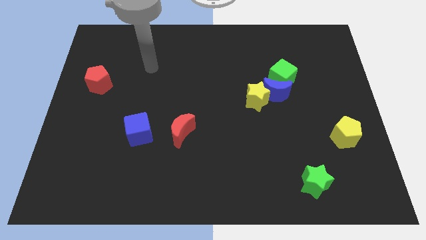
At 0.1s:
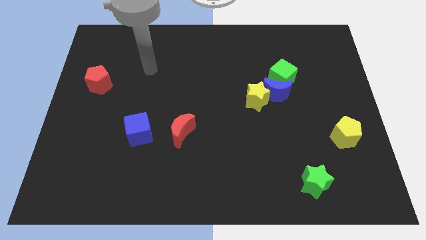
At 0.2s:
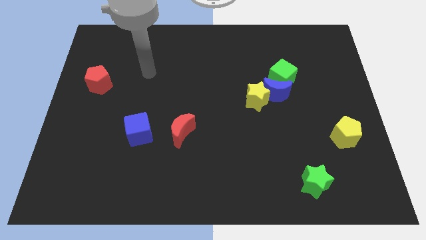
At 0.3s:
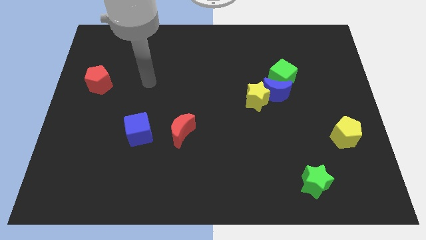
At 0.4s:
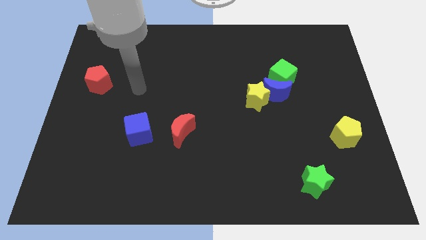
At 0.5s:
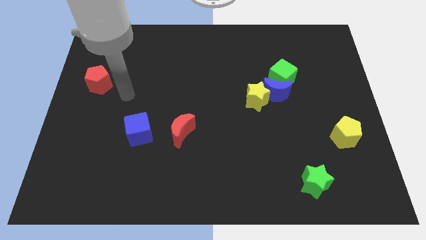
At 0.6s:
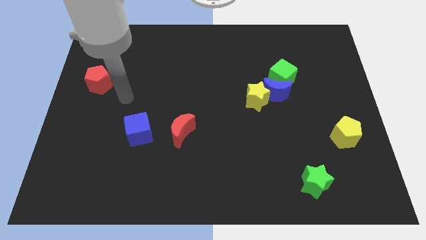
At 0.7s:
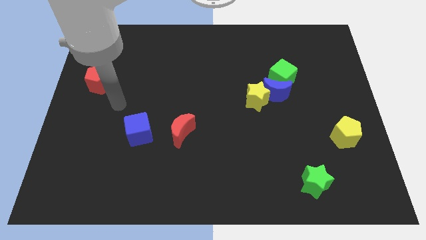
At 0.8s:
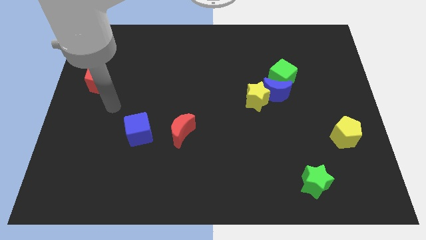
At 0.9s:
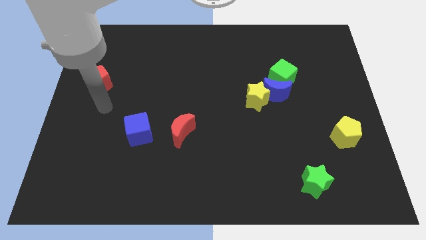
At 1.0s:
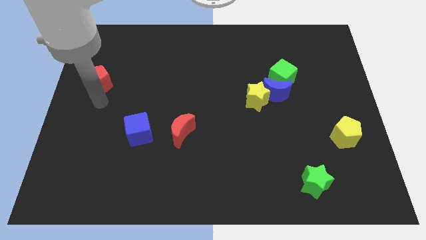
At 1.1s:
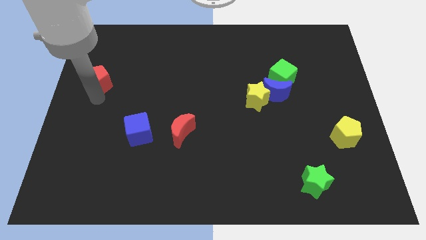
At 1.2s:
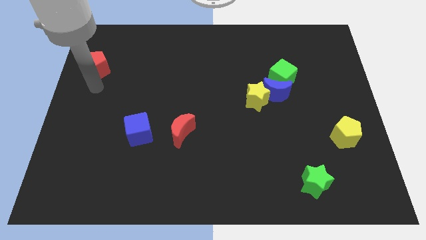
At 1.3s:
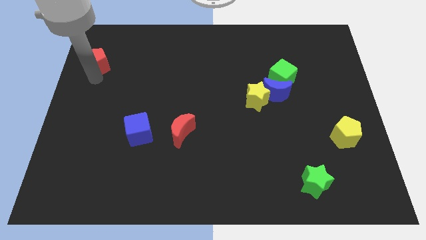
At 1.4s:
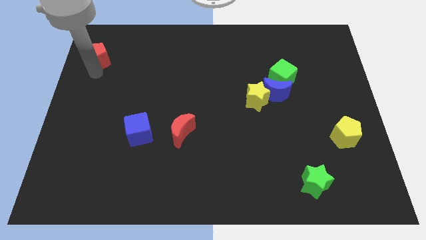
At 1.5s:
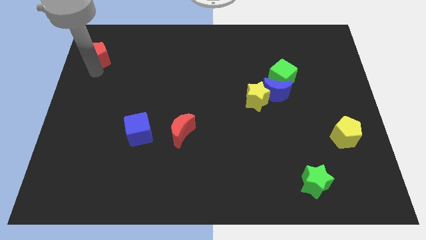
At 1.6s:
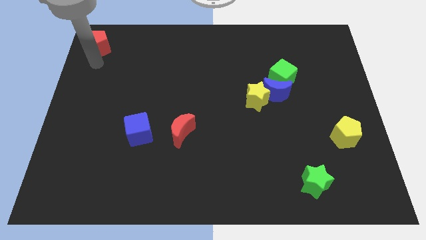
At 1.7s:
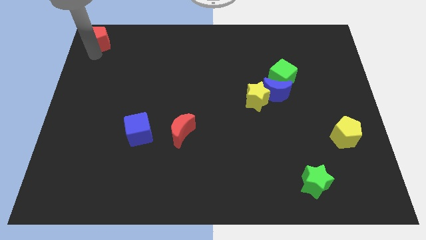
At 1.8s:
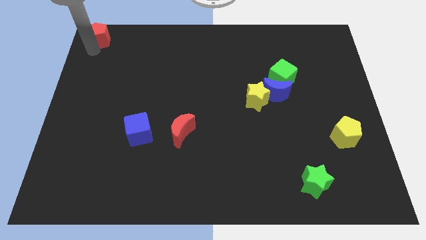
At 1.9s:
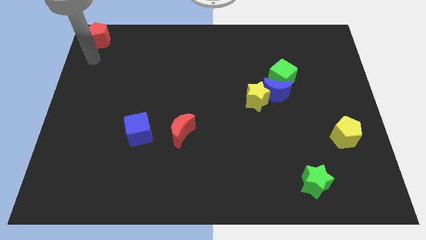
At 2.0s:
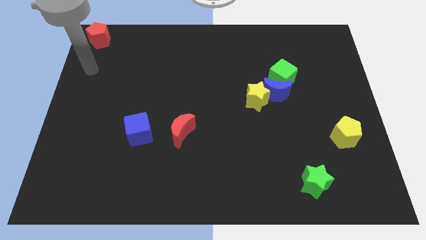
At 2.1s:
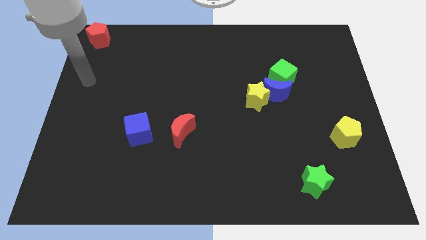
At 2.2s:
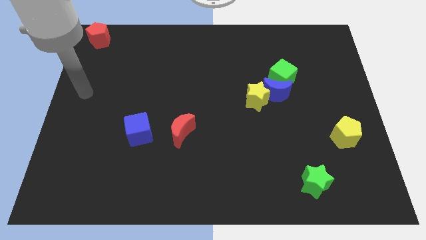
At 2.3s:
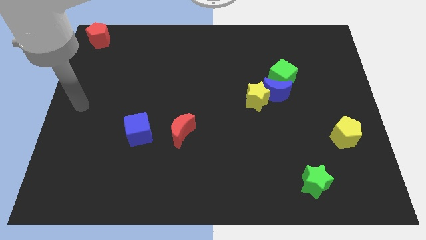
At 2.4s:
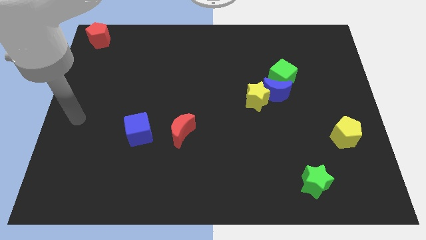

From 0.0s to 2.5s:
move red pentagon to top left corner

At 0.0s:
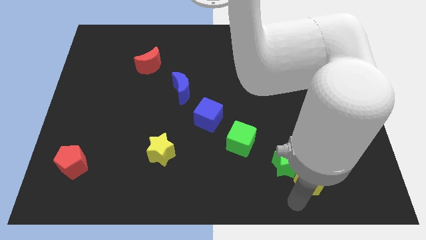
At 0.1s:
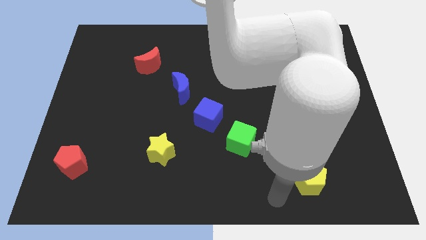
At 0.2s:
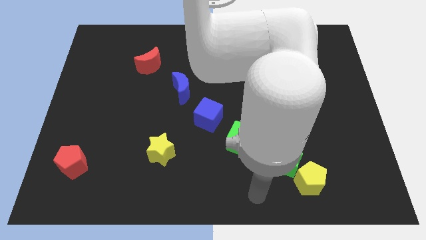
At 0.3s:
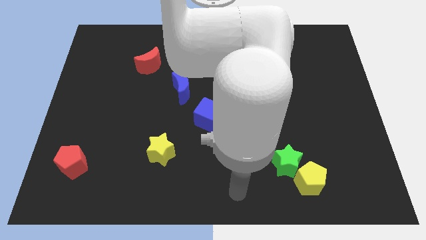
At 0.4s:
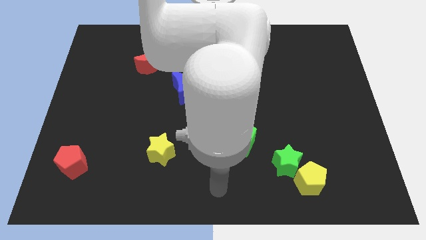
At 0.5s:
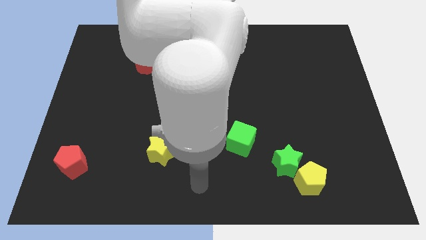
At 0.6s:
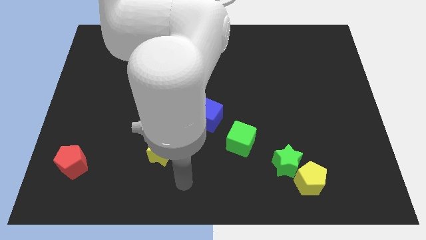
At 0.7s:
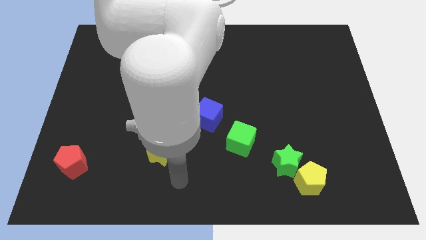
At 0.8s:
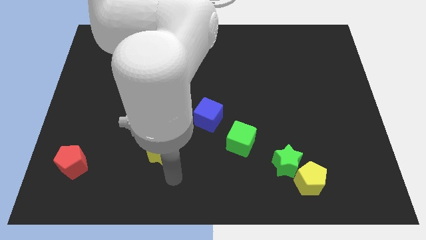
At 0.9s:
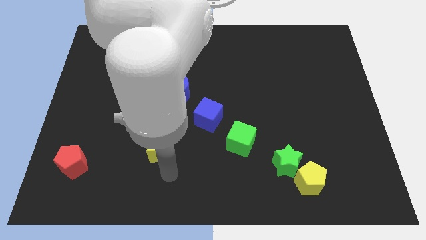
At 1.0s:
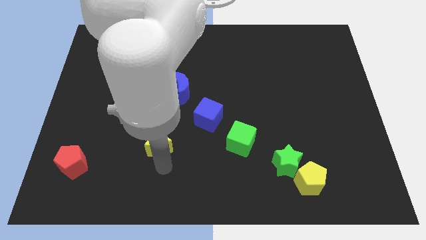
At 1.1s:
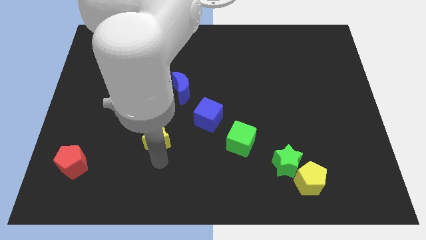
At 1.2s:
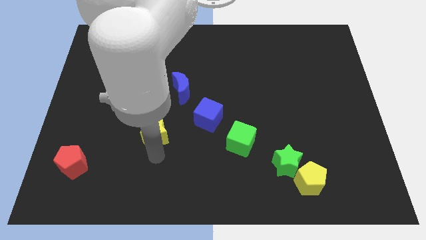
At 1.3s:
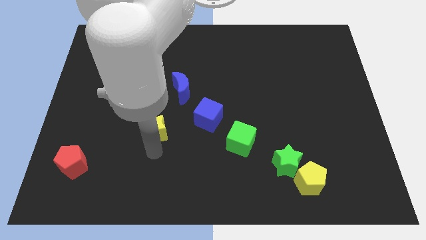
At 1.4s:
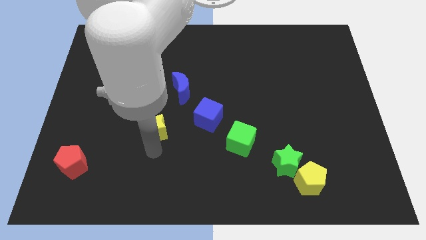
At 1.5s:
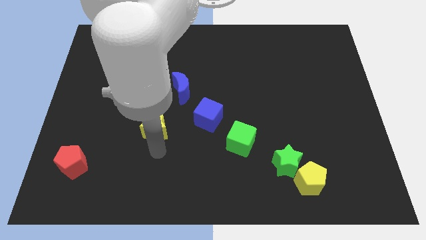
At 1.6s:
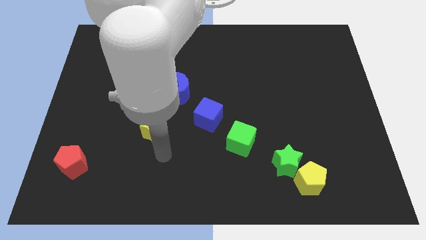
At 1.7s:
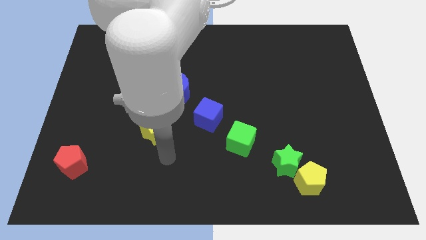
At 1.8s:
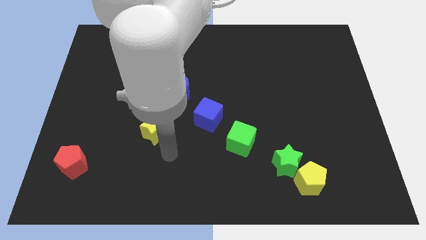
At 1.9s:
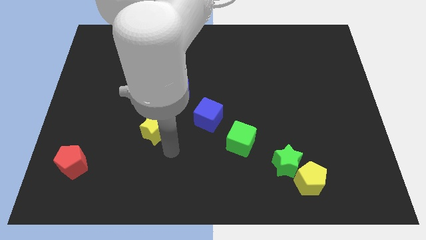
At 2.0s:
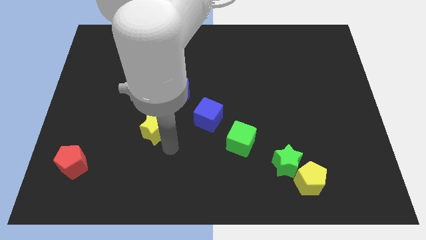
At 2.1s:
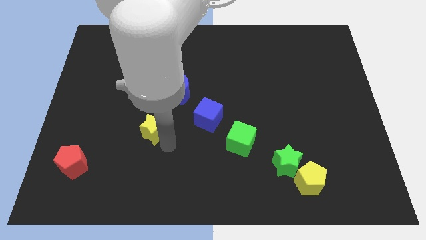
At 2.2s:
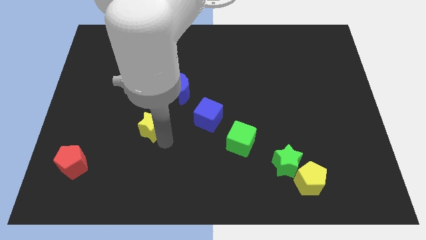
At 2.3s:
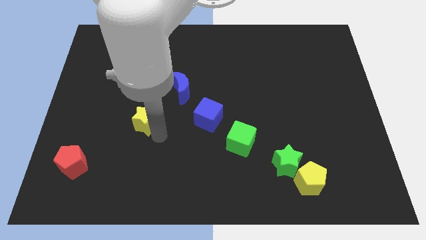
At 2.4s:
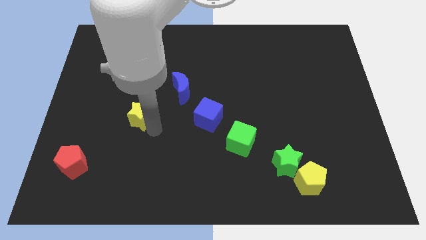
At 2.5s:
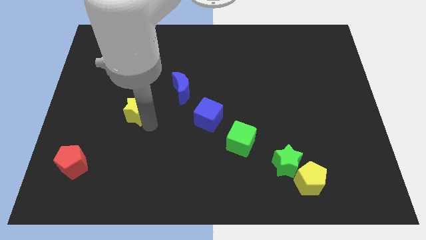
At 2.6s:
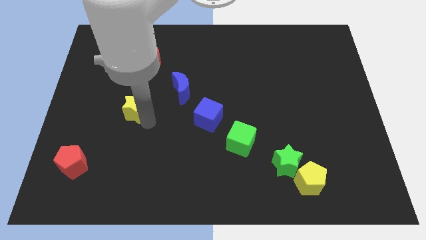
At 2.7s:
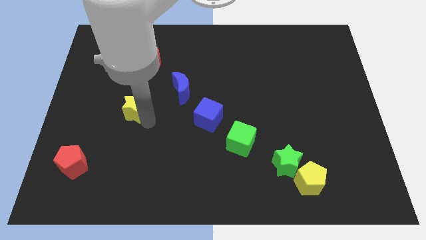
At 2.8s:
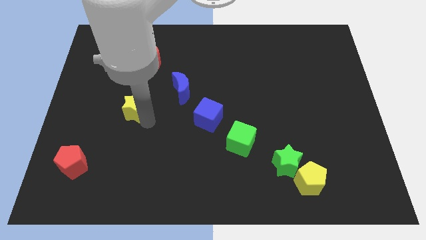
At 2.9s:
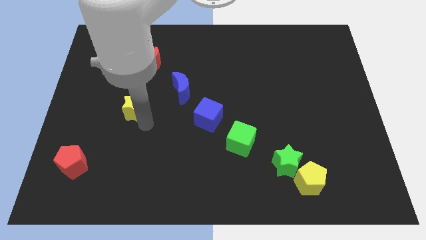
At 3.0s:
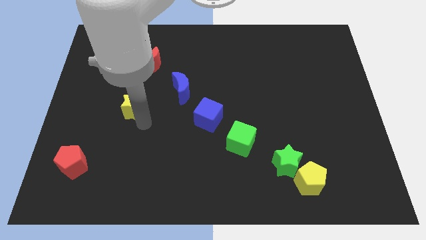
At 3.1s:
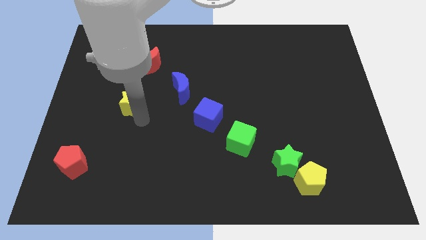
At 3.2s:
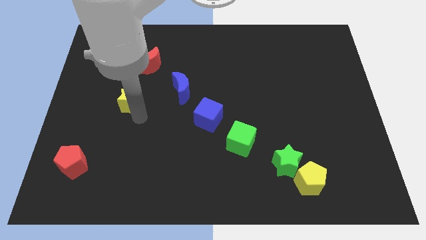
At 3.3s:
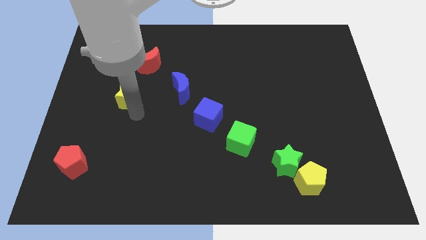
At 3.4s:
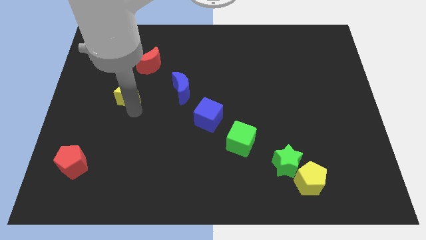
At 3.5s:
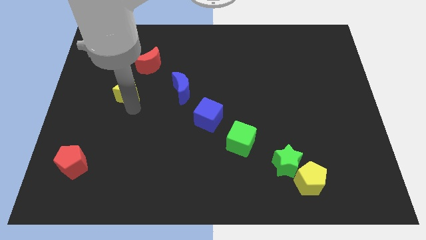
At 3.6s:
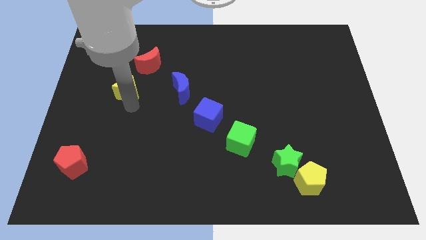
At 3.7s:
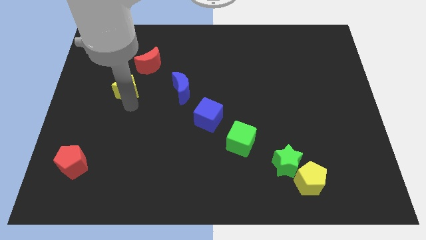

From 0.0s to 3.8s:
move the yellow star to the top left

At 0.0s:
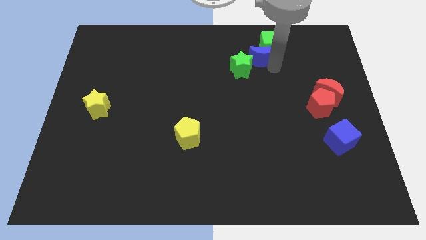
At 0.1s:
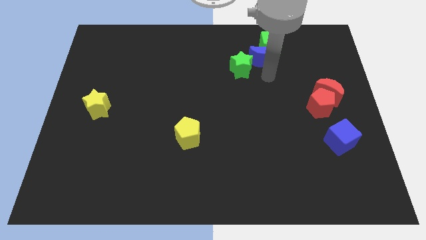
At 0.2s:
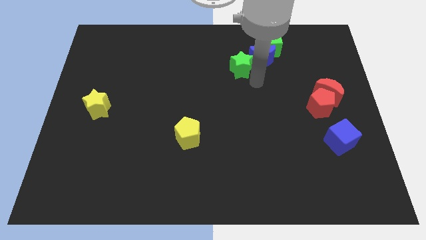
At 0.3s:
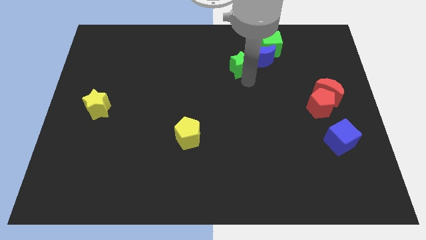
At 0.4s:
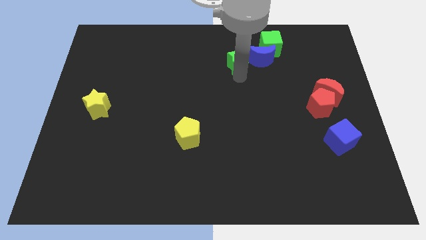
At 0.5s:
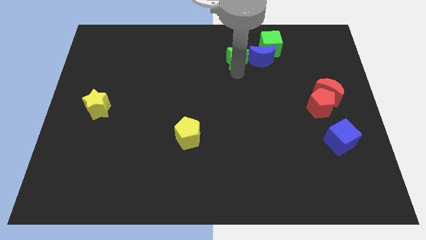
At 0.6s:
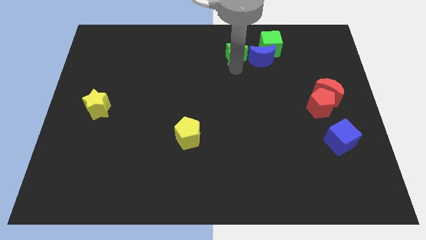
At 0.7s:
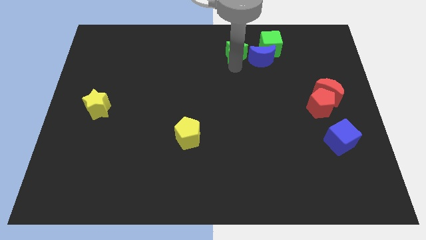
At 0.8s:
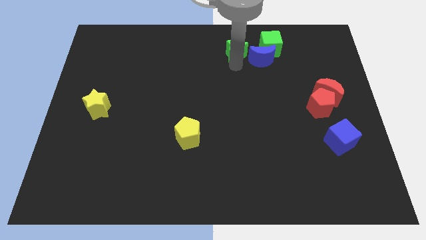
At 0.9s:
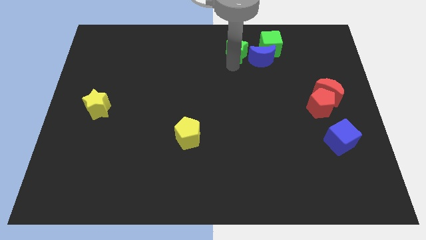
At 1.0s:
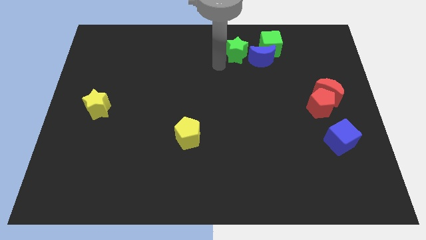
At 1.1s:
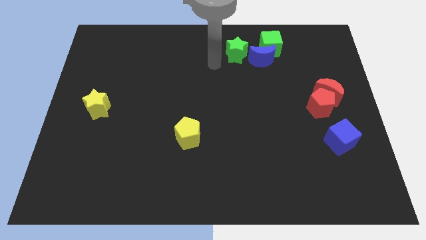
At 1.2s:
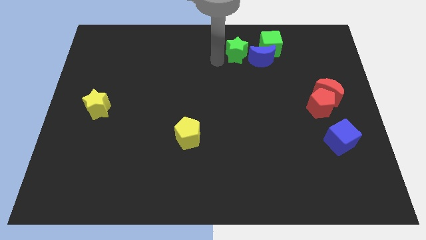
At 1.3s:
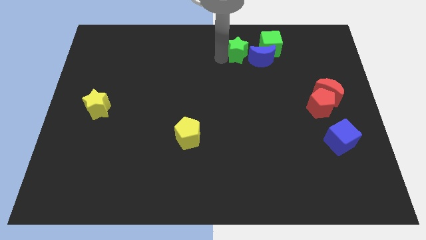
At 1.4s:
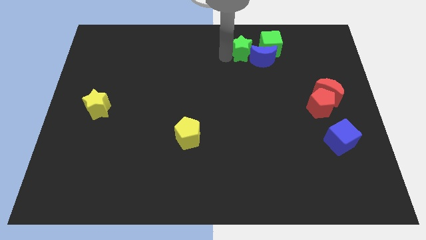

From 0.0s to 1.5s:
push the green star into the blue crescent

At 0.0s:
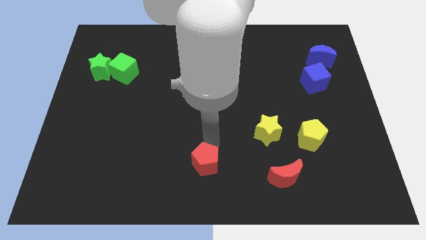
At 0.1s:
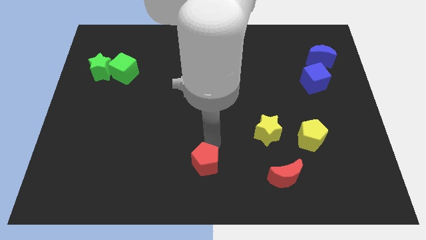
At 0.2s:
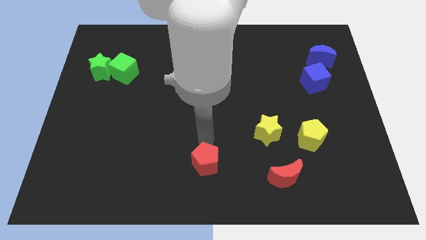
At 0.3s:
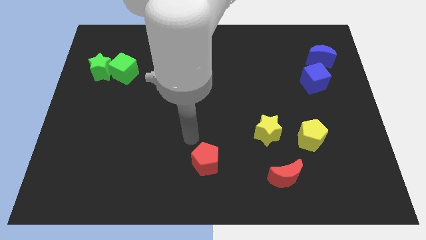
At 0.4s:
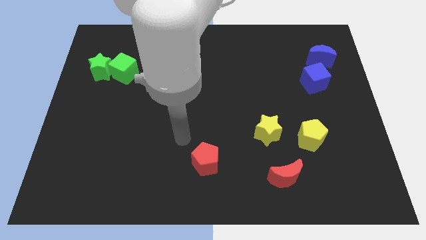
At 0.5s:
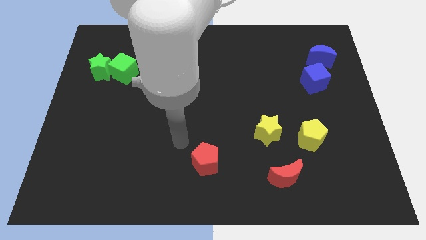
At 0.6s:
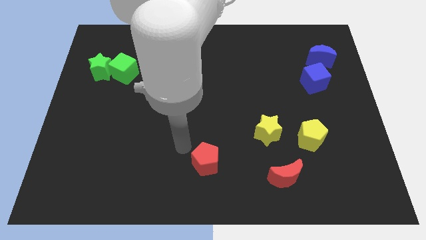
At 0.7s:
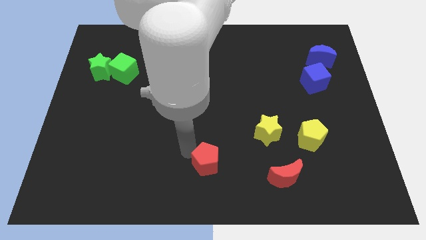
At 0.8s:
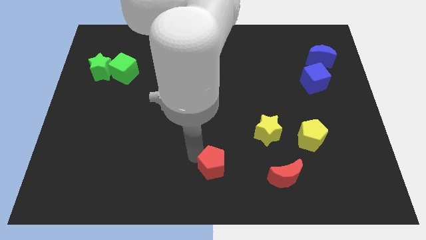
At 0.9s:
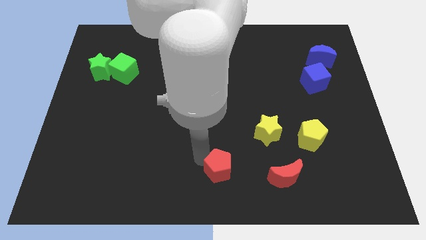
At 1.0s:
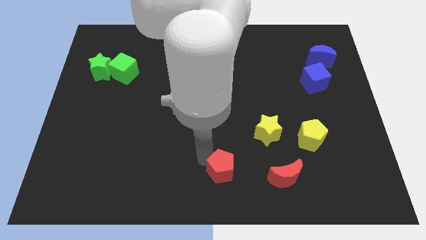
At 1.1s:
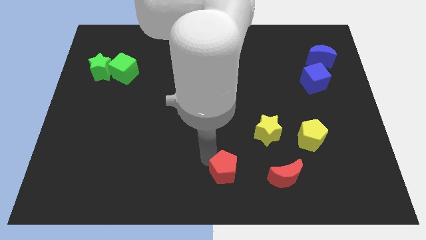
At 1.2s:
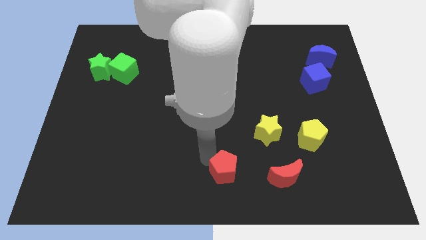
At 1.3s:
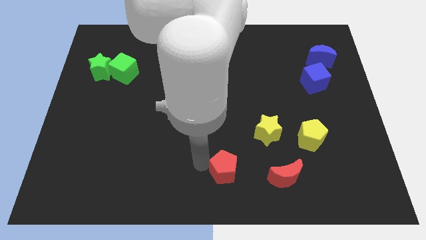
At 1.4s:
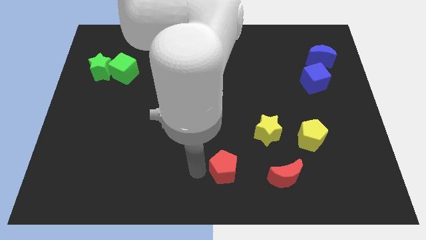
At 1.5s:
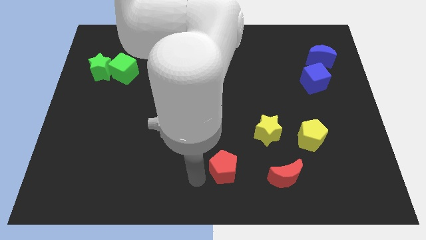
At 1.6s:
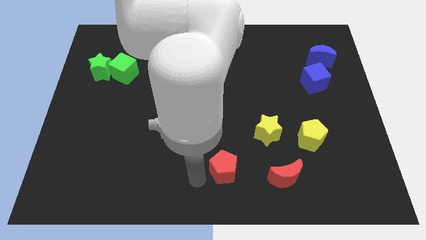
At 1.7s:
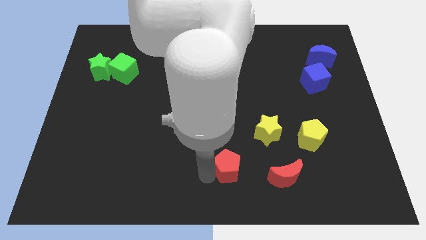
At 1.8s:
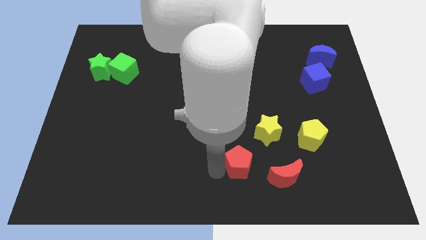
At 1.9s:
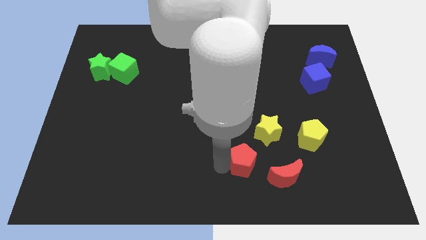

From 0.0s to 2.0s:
drag the red pentagon slightly to the right
